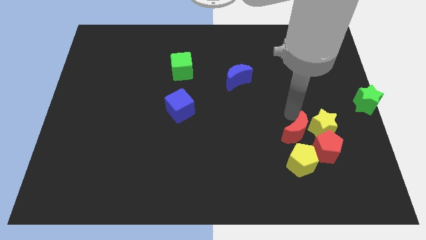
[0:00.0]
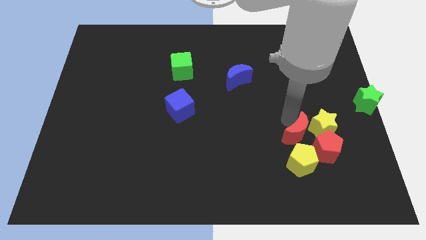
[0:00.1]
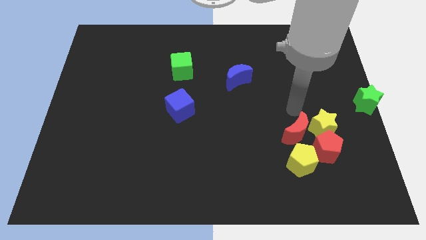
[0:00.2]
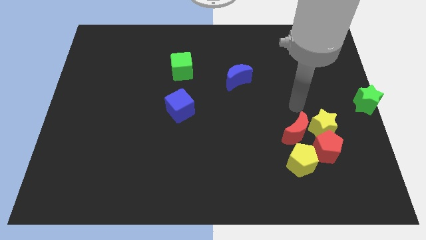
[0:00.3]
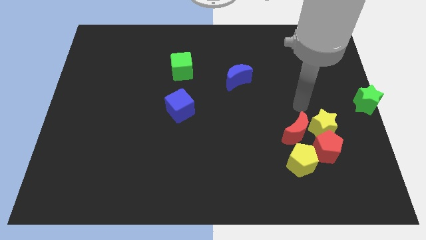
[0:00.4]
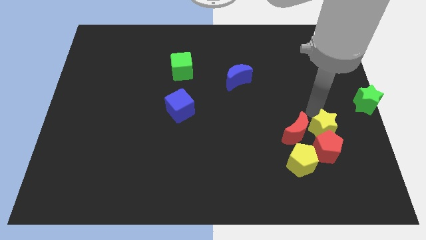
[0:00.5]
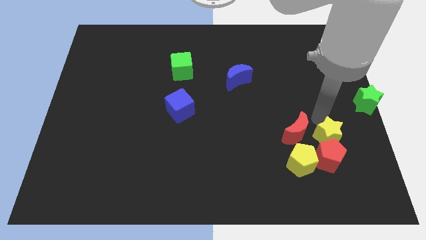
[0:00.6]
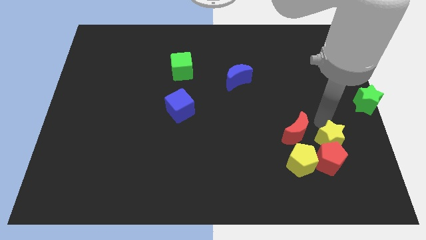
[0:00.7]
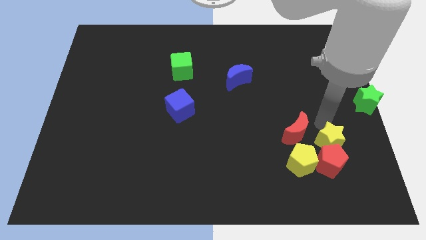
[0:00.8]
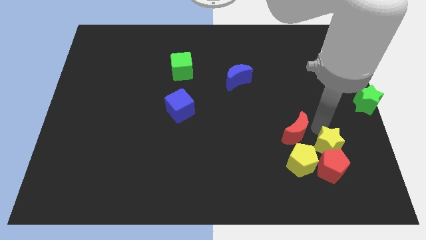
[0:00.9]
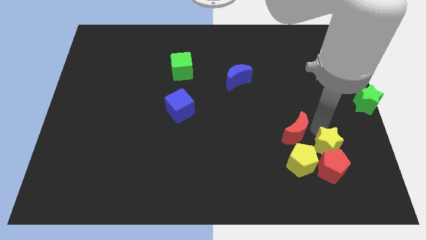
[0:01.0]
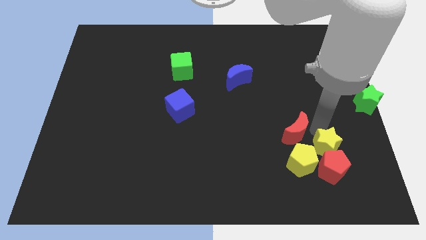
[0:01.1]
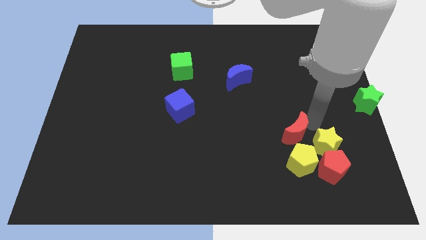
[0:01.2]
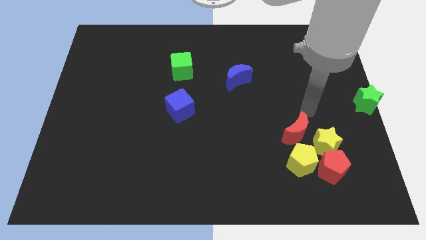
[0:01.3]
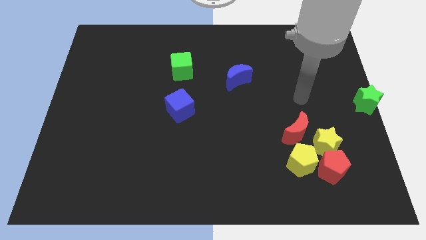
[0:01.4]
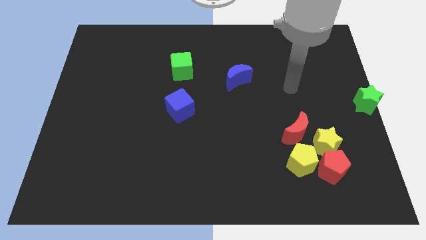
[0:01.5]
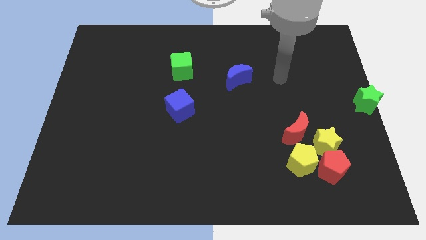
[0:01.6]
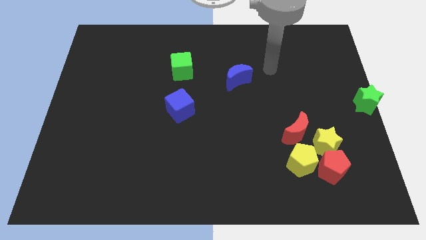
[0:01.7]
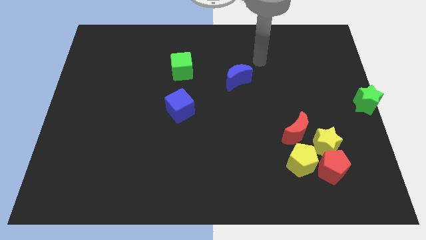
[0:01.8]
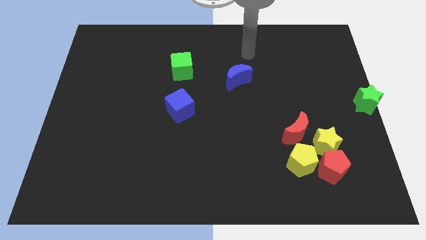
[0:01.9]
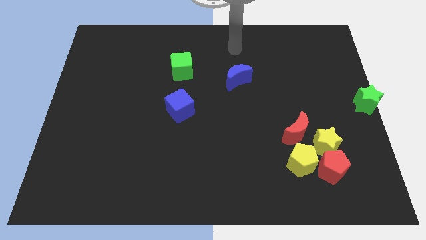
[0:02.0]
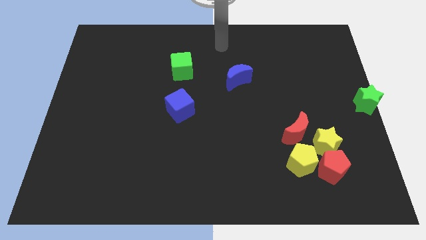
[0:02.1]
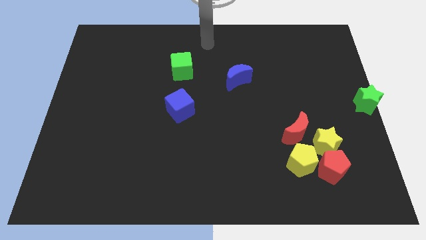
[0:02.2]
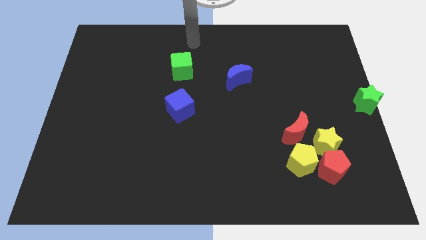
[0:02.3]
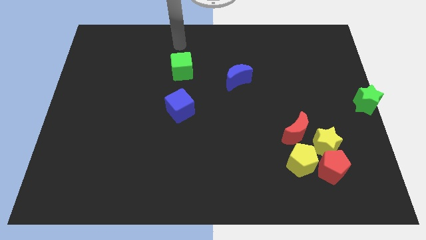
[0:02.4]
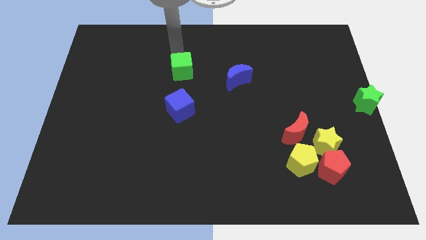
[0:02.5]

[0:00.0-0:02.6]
group up the red and yellow blocks

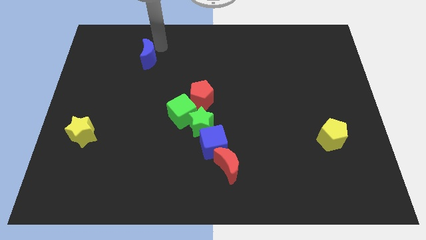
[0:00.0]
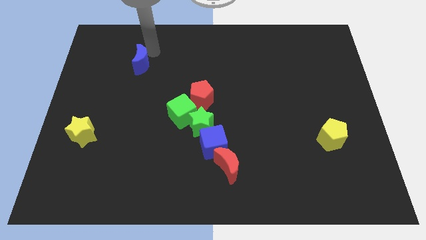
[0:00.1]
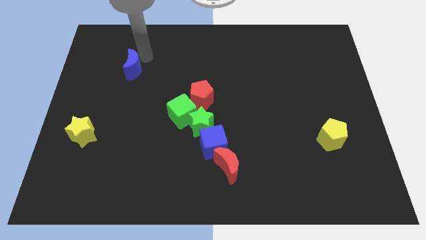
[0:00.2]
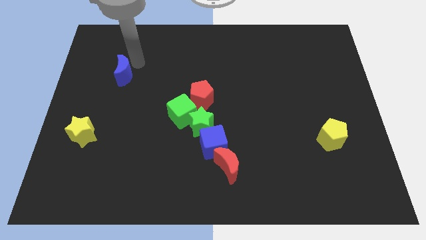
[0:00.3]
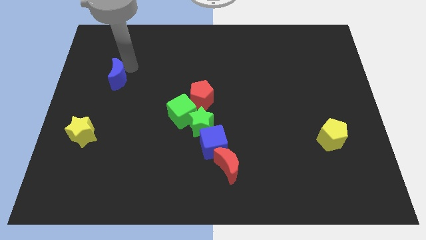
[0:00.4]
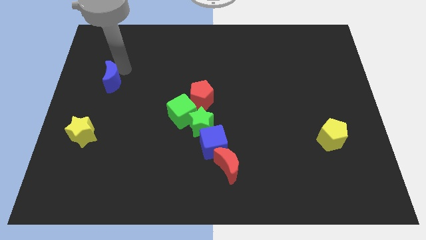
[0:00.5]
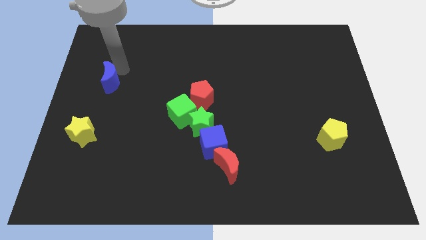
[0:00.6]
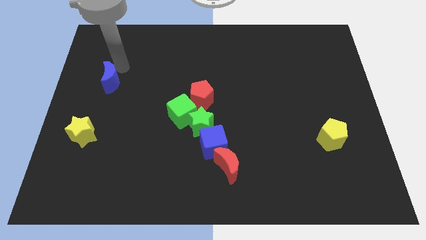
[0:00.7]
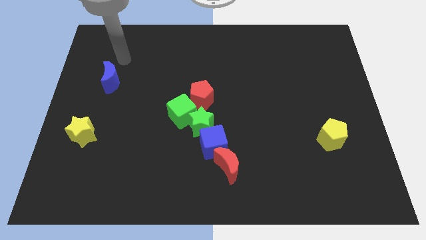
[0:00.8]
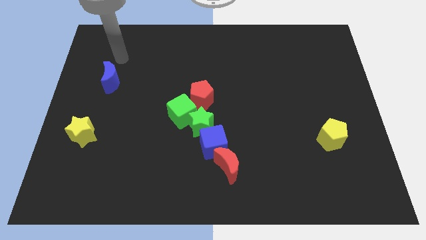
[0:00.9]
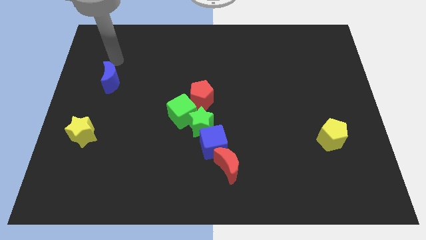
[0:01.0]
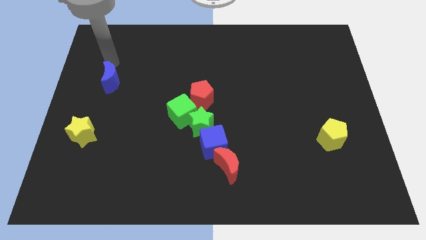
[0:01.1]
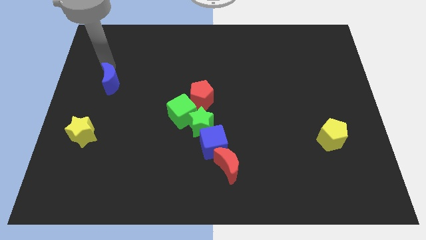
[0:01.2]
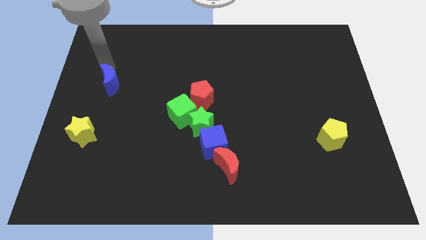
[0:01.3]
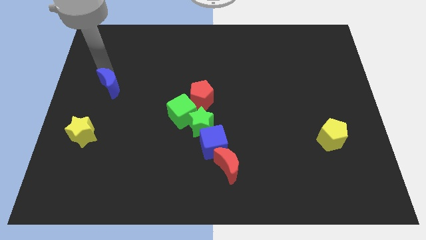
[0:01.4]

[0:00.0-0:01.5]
place the blue moon above the yellow star

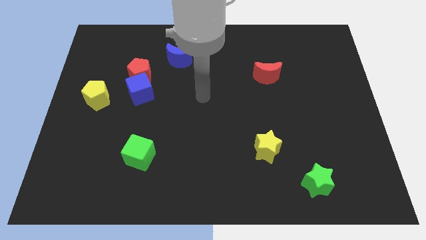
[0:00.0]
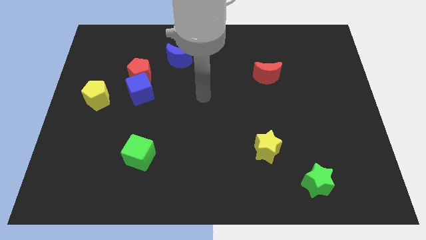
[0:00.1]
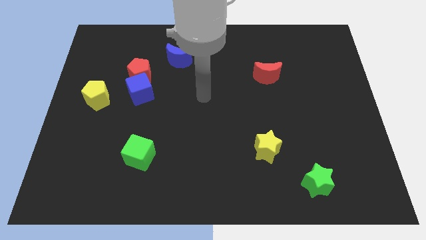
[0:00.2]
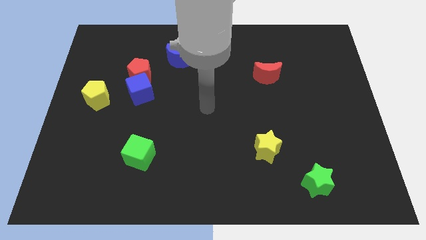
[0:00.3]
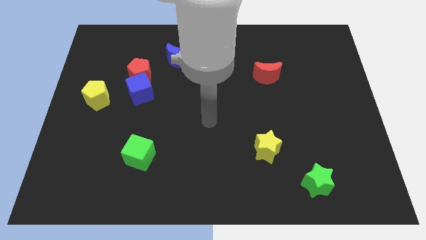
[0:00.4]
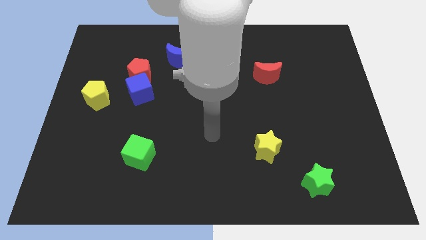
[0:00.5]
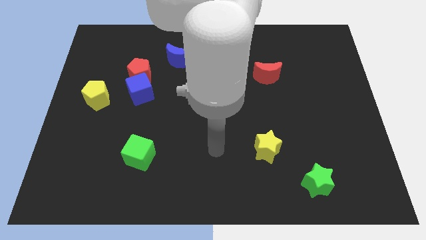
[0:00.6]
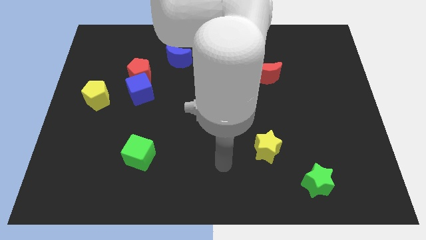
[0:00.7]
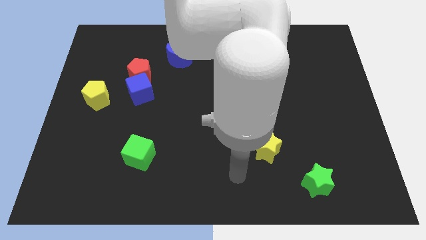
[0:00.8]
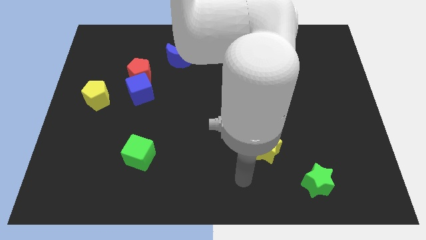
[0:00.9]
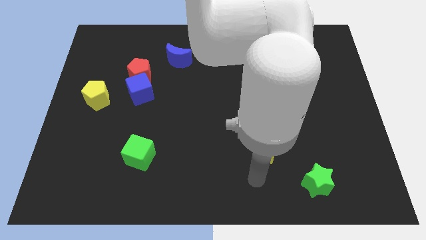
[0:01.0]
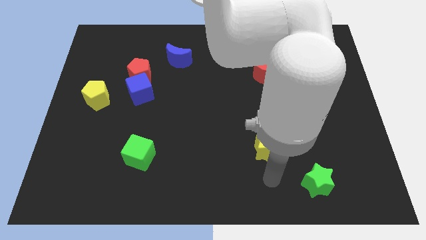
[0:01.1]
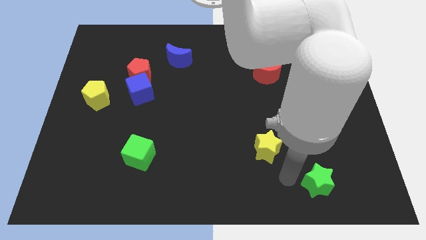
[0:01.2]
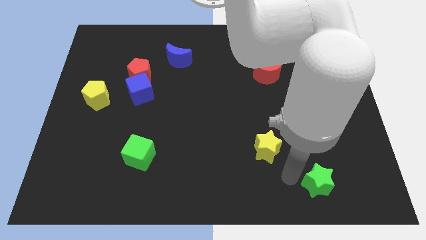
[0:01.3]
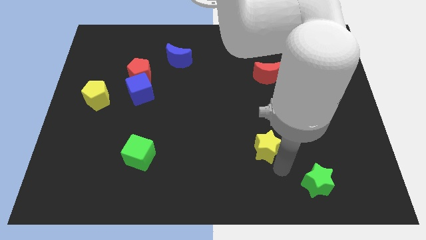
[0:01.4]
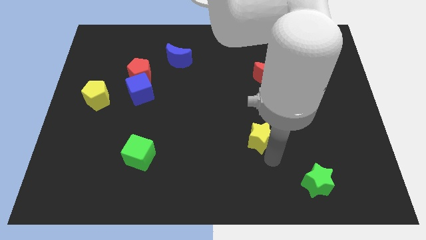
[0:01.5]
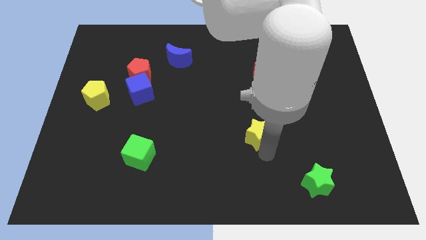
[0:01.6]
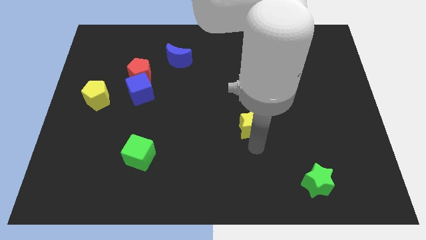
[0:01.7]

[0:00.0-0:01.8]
move the yellow star towards the center of the board

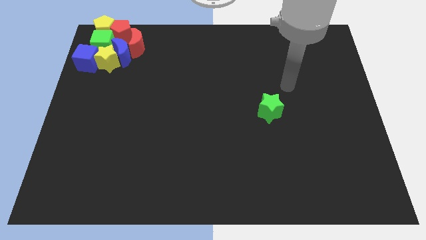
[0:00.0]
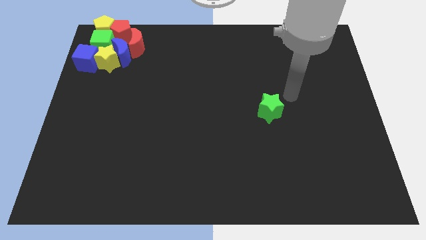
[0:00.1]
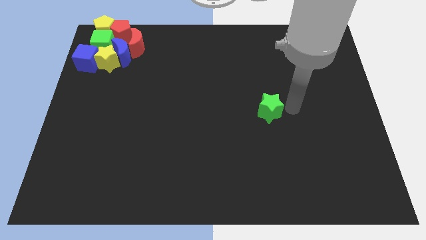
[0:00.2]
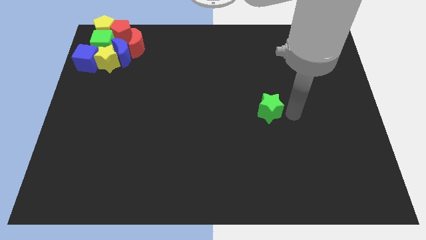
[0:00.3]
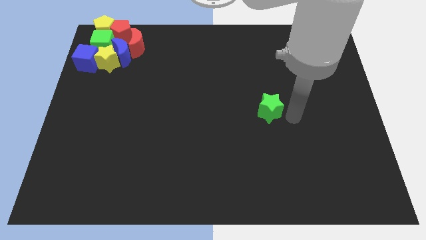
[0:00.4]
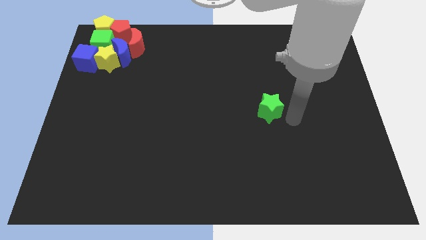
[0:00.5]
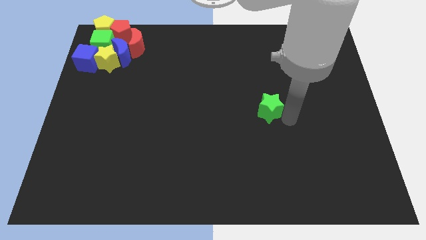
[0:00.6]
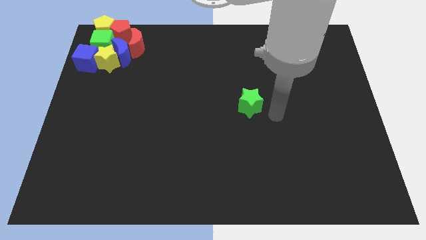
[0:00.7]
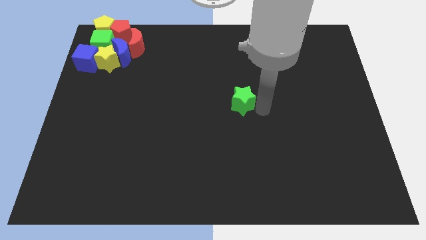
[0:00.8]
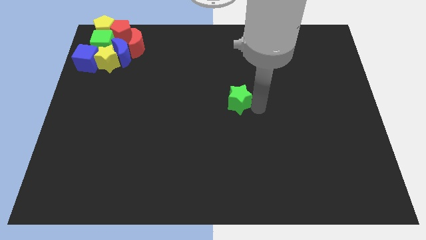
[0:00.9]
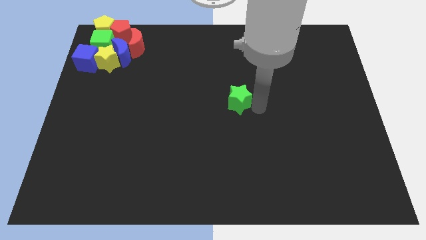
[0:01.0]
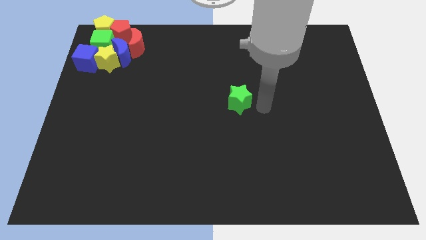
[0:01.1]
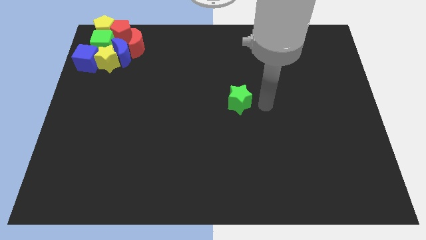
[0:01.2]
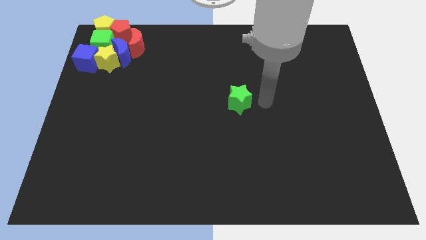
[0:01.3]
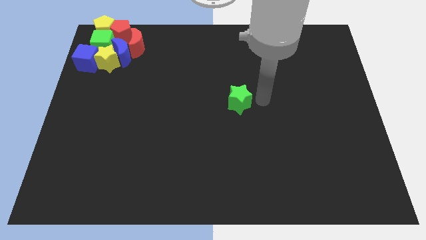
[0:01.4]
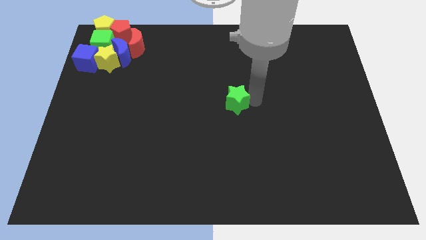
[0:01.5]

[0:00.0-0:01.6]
push the green star towards the center of the board

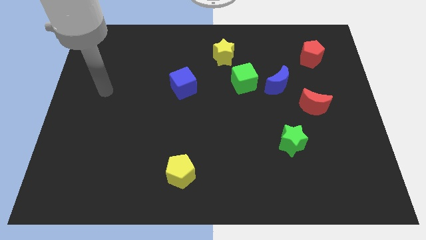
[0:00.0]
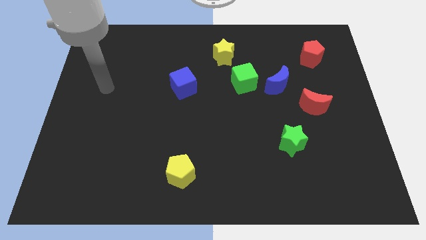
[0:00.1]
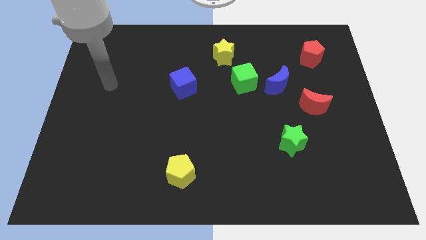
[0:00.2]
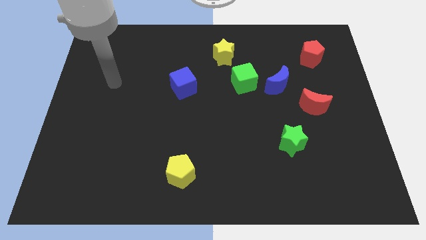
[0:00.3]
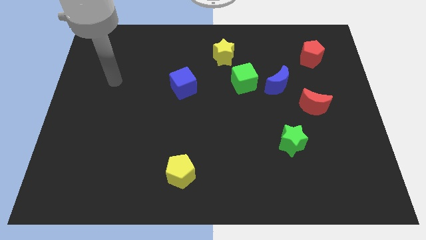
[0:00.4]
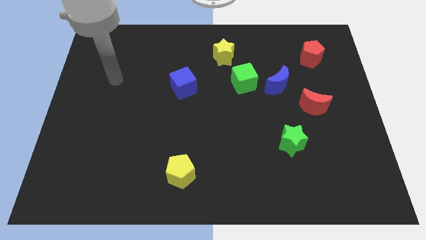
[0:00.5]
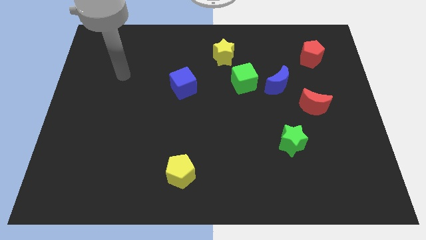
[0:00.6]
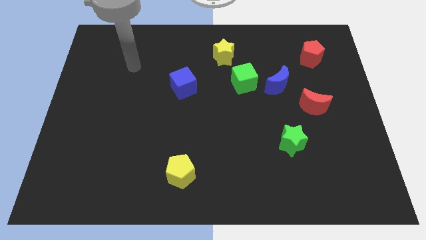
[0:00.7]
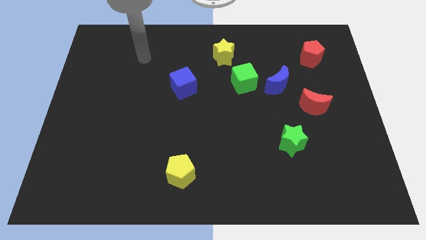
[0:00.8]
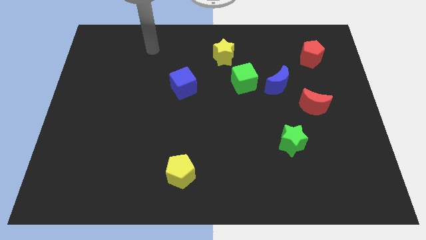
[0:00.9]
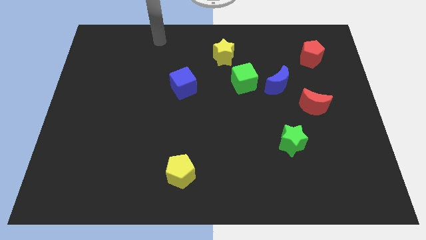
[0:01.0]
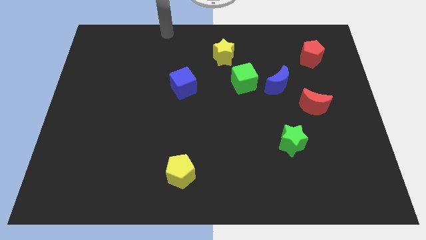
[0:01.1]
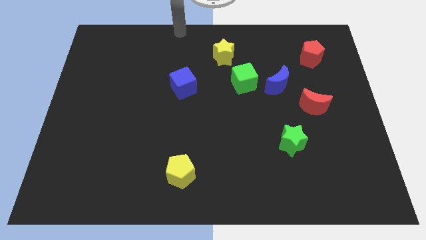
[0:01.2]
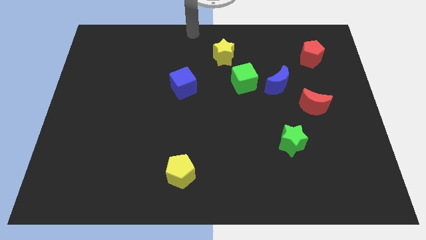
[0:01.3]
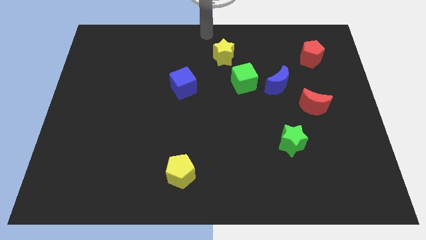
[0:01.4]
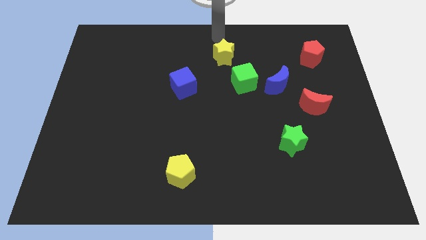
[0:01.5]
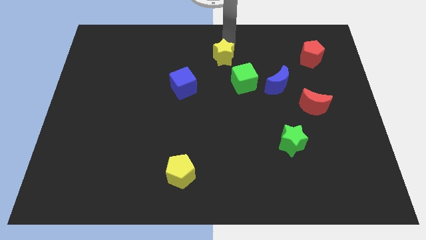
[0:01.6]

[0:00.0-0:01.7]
point your arm above the yellow star
